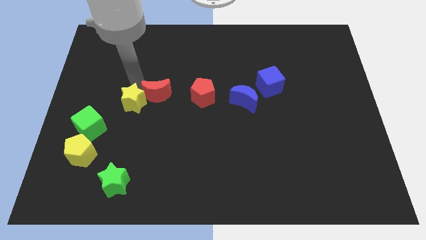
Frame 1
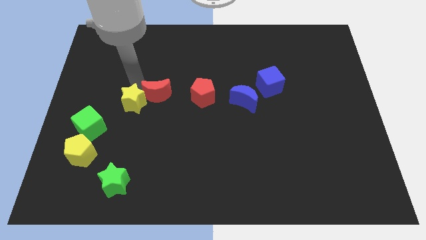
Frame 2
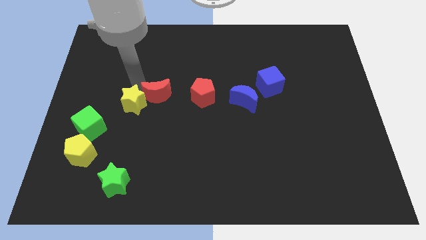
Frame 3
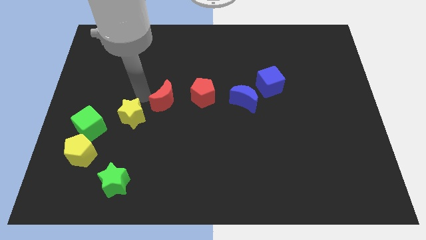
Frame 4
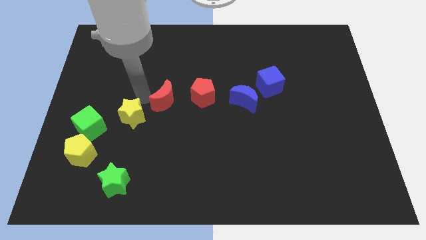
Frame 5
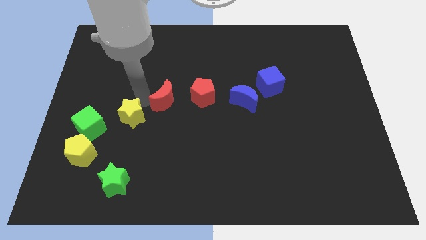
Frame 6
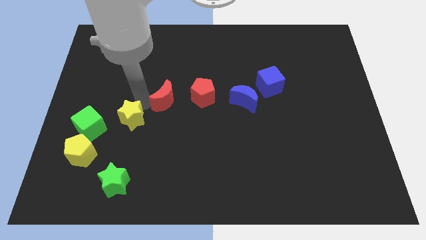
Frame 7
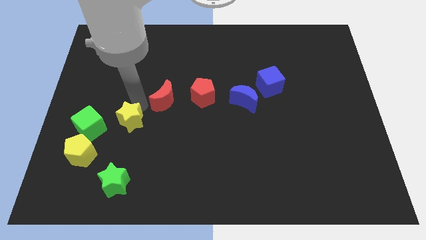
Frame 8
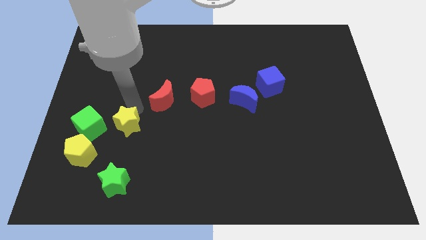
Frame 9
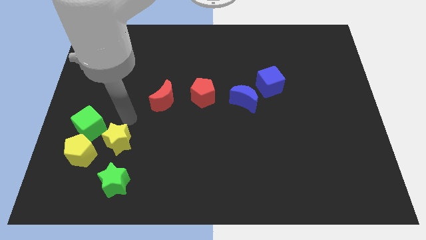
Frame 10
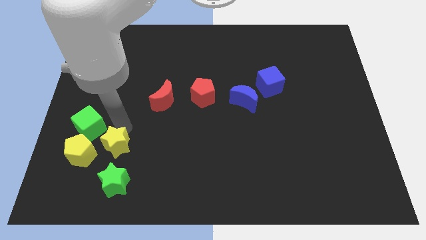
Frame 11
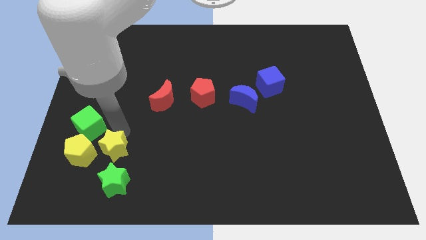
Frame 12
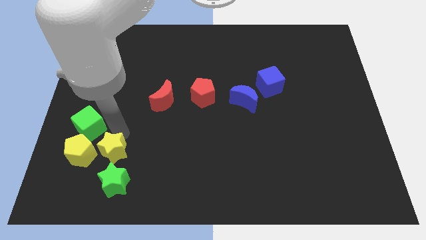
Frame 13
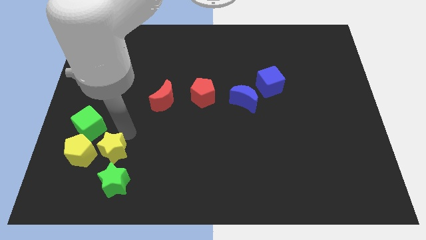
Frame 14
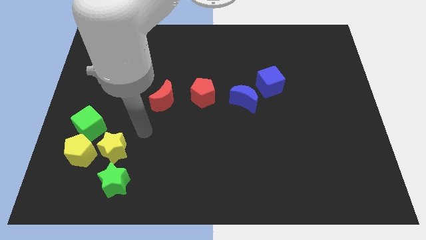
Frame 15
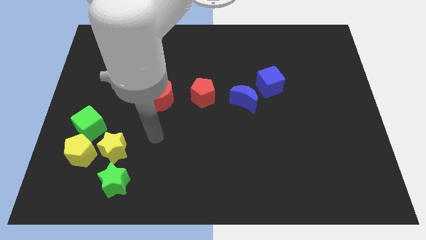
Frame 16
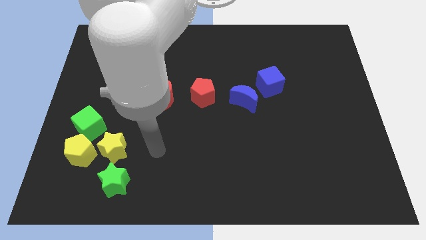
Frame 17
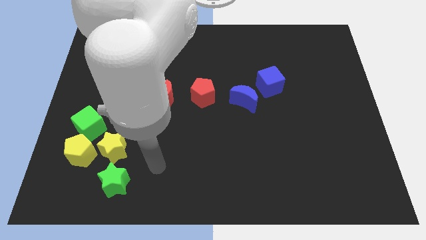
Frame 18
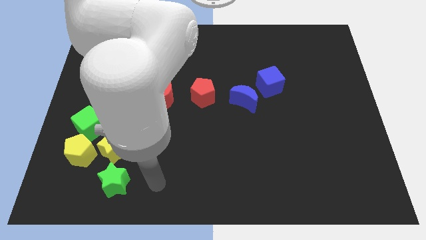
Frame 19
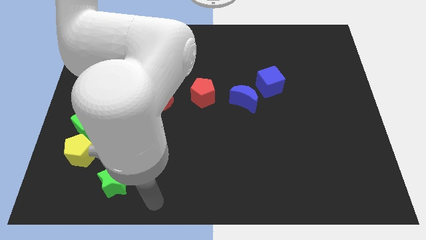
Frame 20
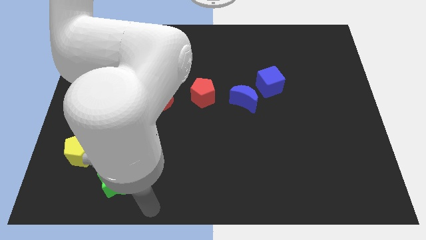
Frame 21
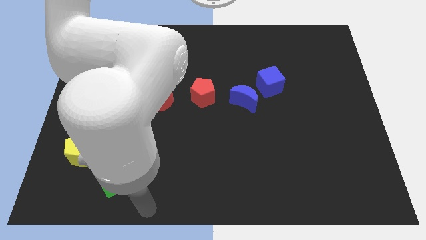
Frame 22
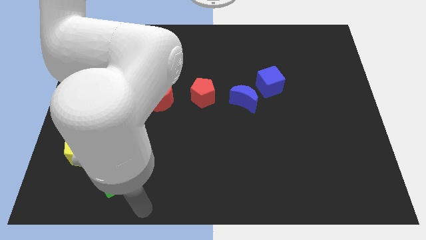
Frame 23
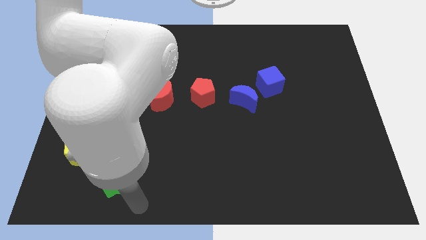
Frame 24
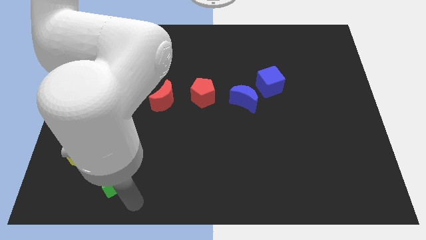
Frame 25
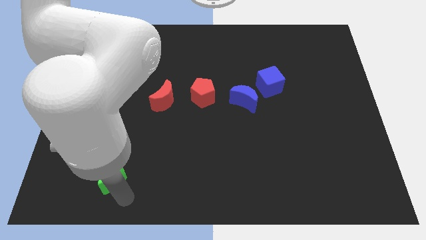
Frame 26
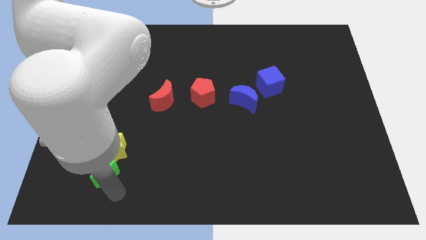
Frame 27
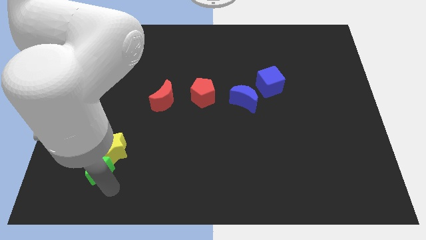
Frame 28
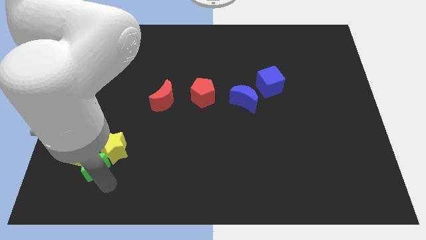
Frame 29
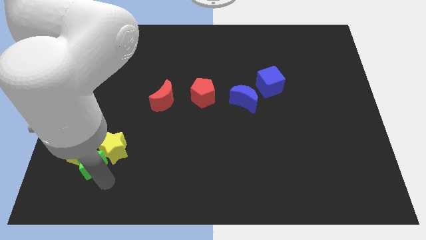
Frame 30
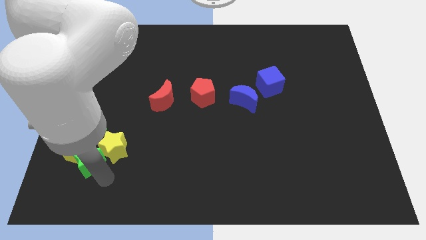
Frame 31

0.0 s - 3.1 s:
add yellow and green stars to the yellow pentagon

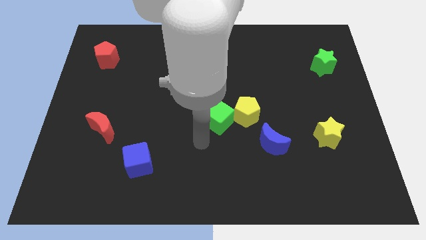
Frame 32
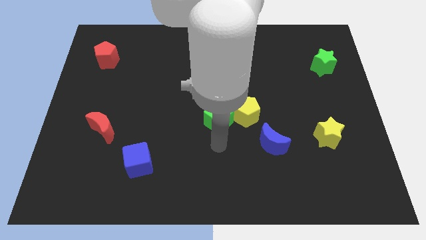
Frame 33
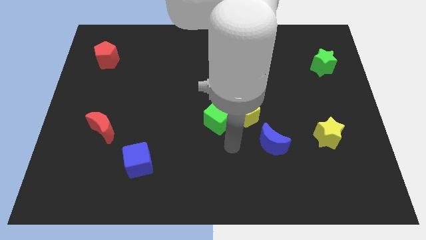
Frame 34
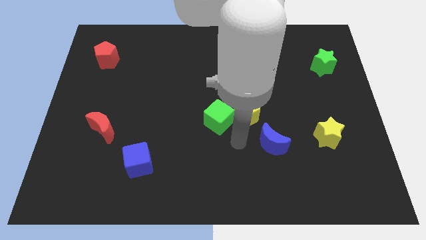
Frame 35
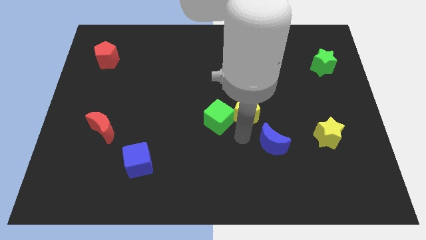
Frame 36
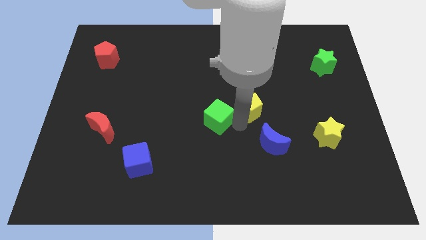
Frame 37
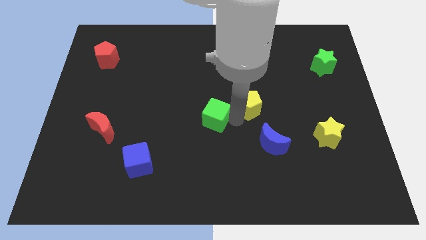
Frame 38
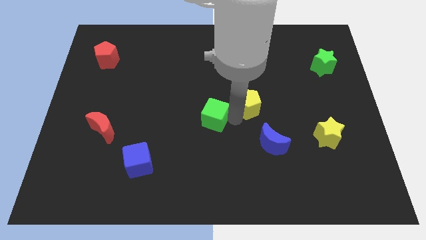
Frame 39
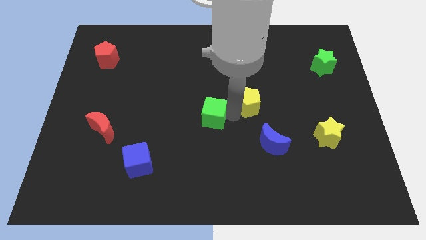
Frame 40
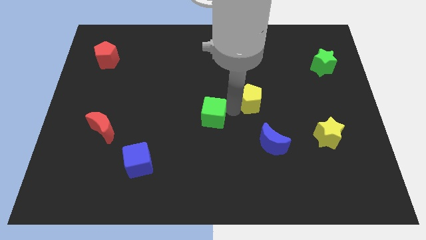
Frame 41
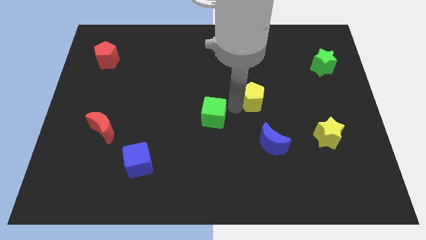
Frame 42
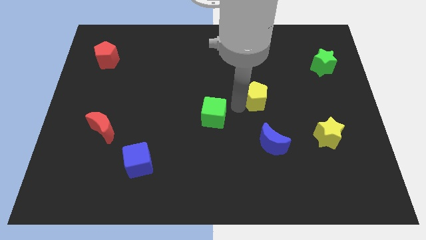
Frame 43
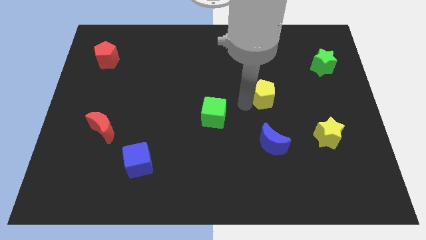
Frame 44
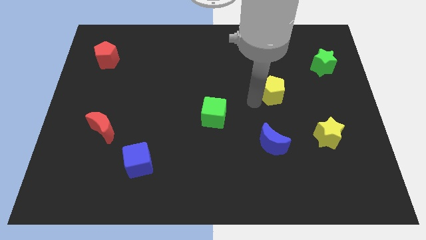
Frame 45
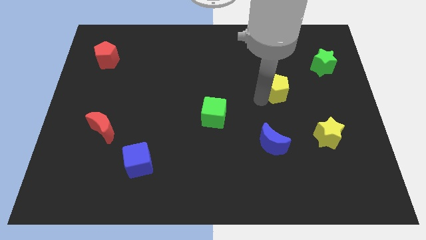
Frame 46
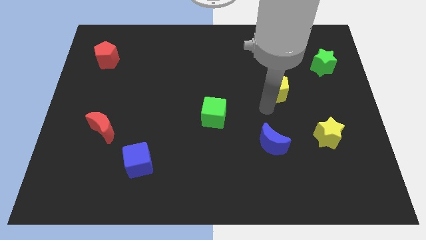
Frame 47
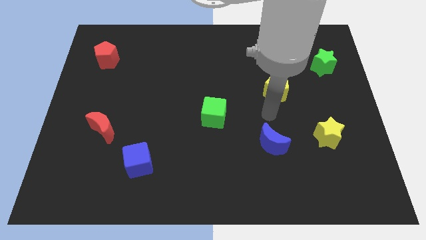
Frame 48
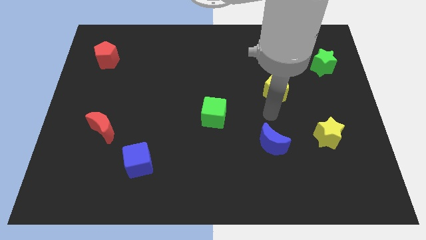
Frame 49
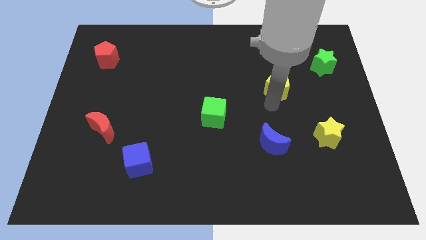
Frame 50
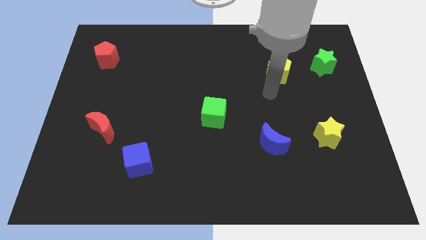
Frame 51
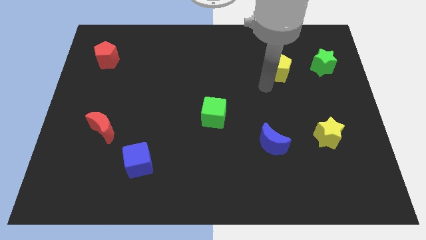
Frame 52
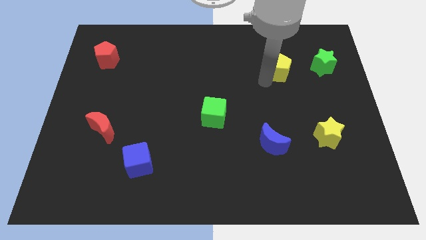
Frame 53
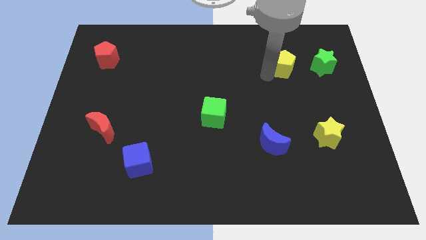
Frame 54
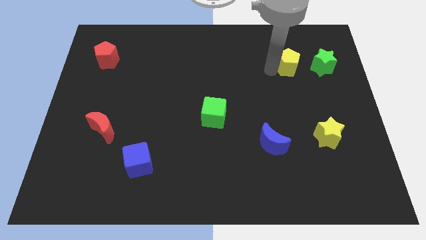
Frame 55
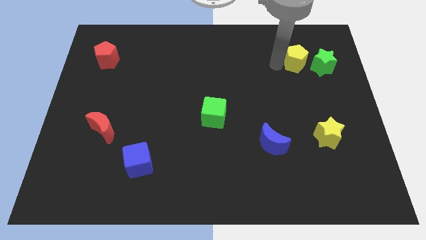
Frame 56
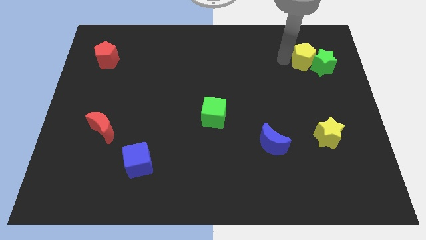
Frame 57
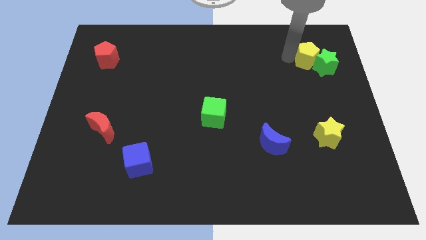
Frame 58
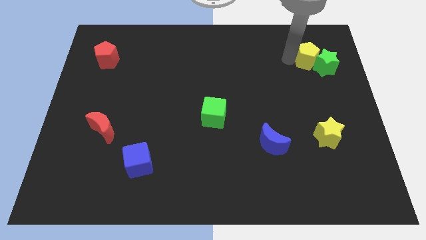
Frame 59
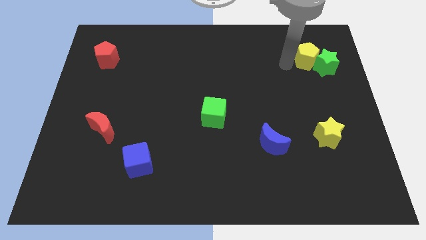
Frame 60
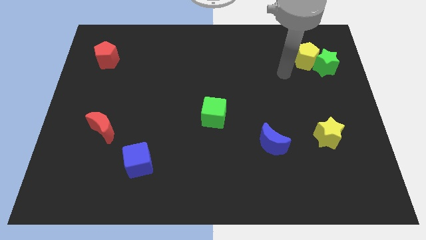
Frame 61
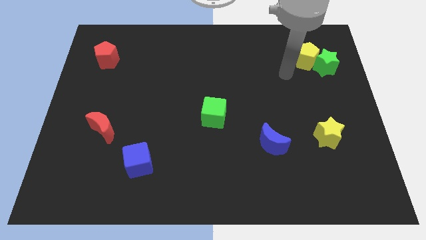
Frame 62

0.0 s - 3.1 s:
separate the yellow pentagon from the green cube

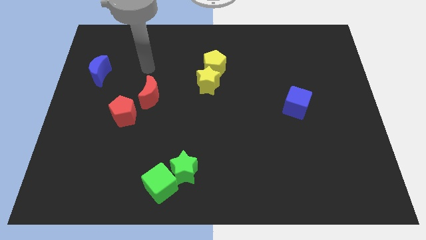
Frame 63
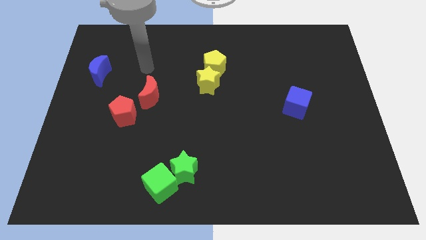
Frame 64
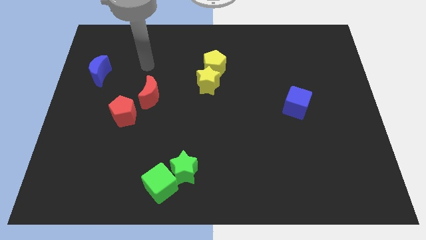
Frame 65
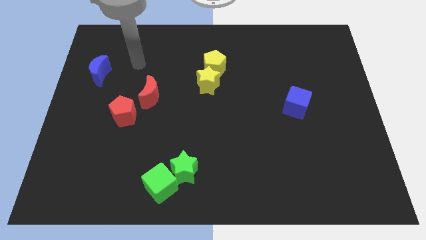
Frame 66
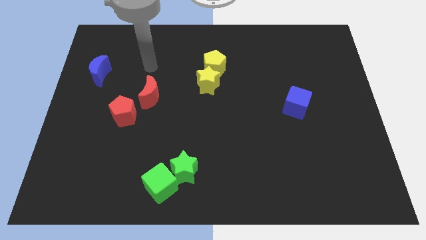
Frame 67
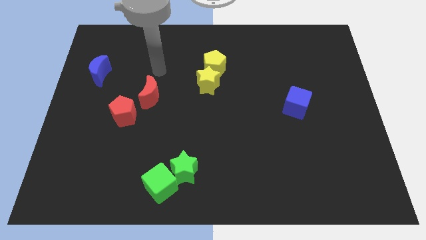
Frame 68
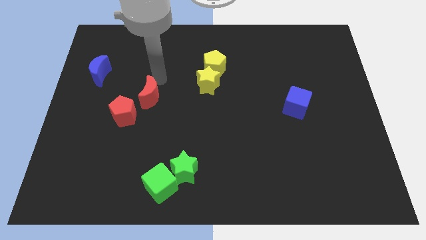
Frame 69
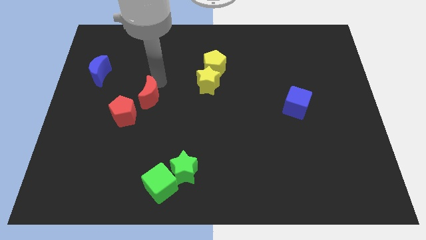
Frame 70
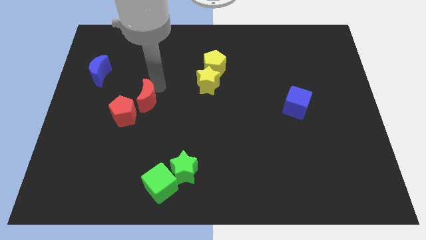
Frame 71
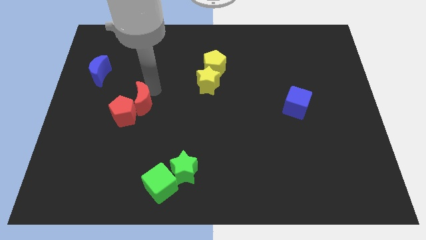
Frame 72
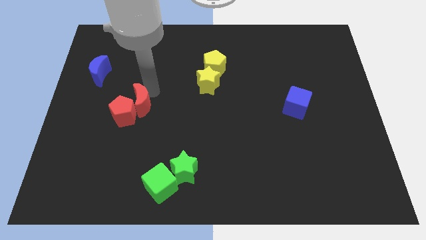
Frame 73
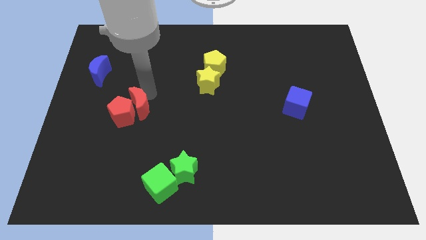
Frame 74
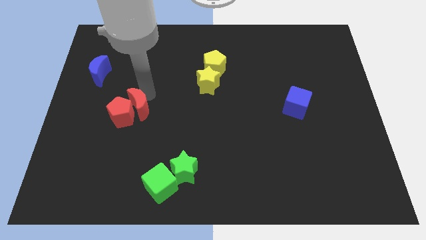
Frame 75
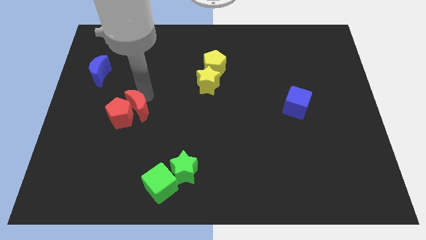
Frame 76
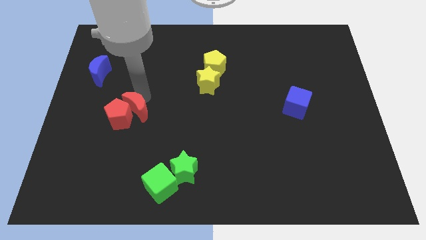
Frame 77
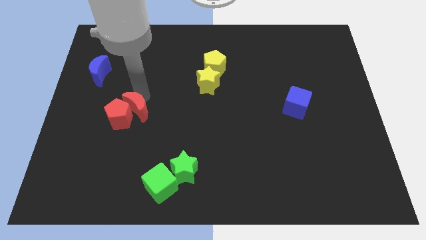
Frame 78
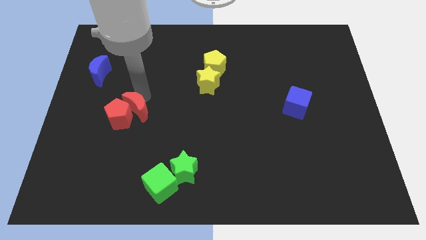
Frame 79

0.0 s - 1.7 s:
push the red moon into the red pentagon

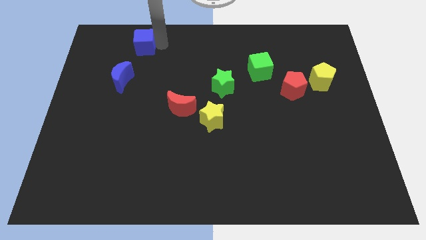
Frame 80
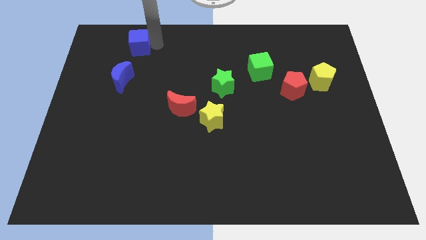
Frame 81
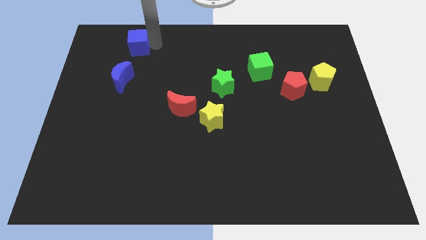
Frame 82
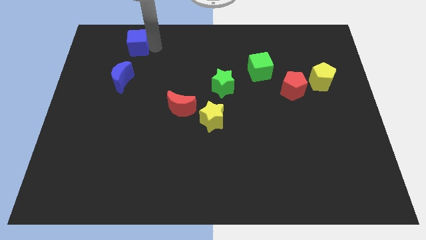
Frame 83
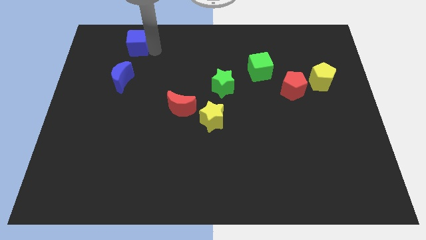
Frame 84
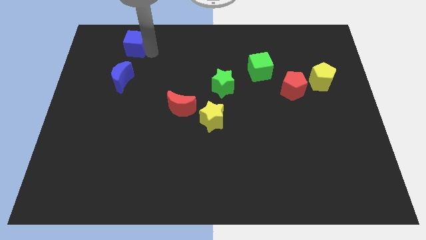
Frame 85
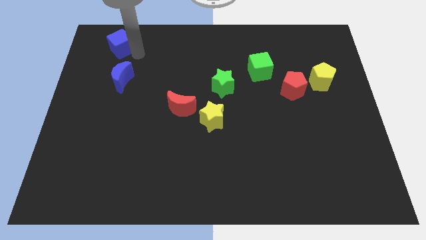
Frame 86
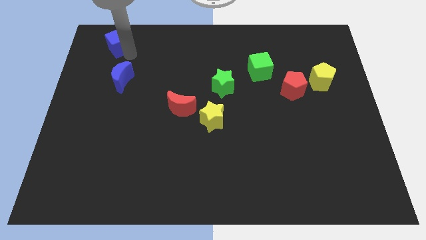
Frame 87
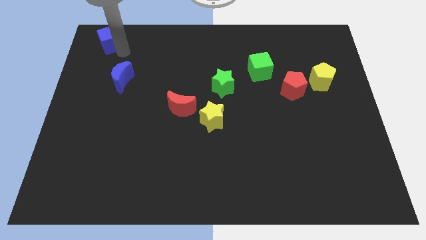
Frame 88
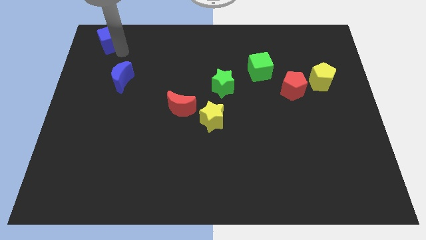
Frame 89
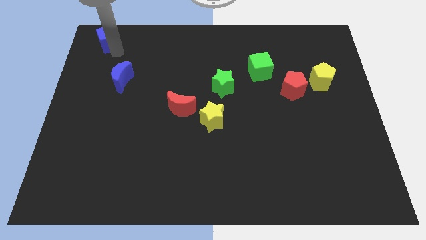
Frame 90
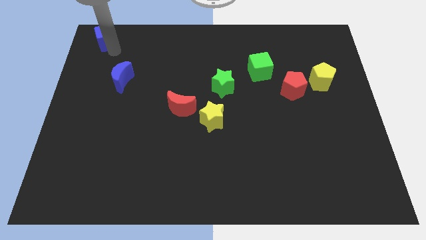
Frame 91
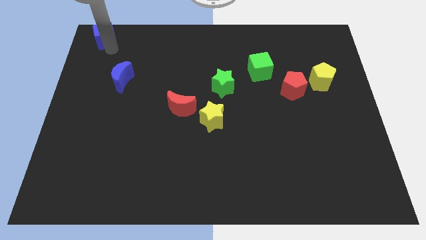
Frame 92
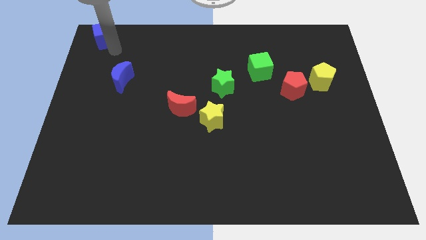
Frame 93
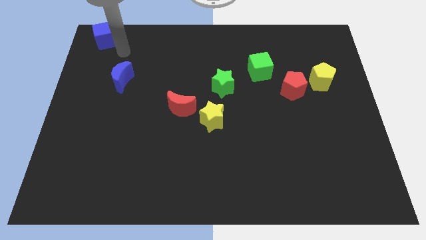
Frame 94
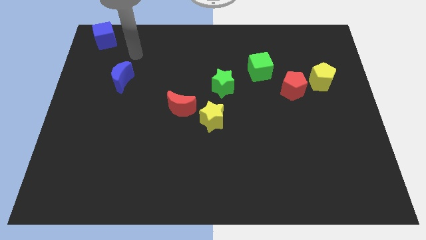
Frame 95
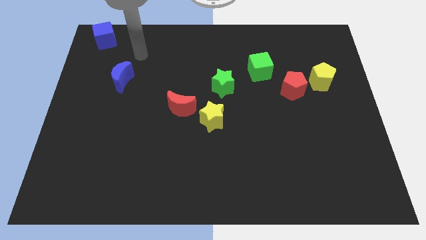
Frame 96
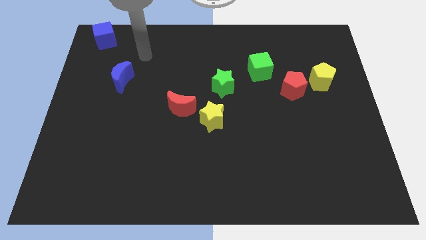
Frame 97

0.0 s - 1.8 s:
push blue cube to the top left corner of the board
